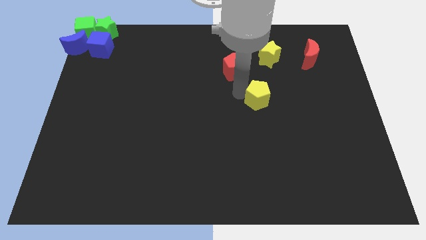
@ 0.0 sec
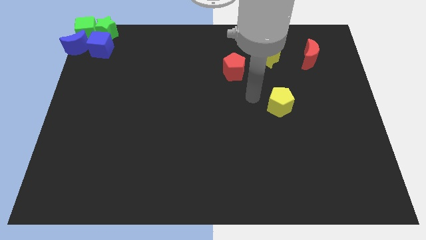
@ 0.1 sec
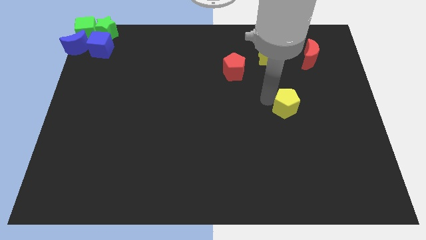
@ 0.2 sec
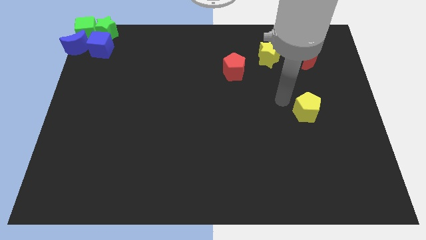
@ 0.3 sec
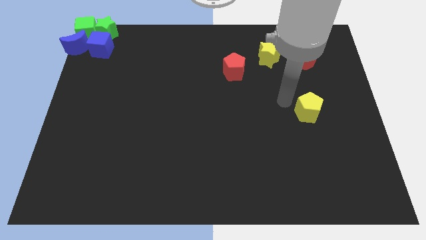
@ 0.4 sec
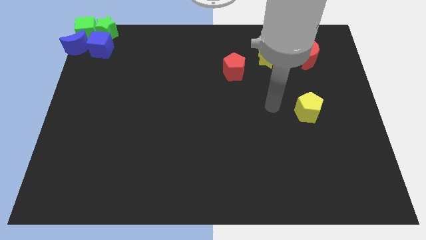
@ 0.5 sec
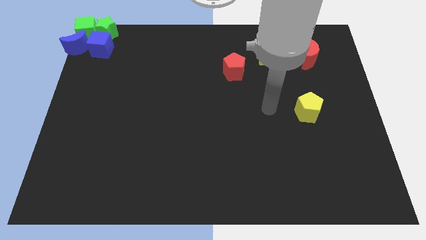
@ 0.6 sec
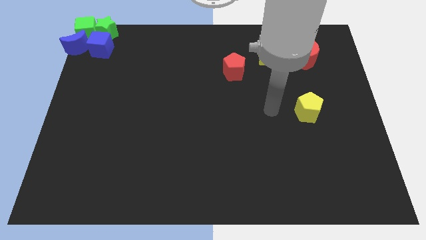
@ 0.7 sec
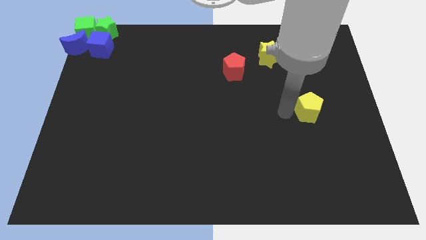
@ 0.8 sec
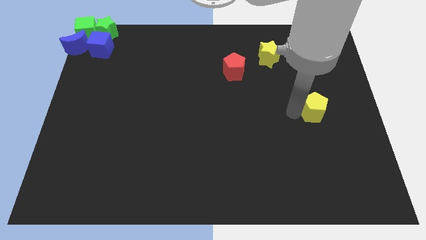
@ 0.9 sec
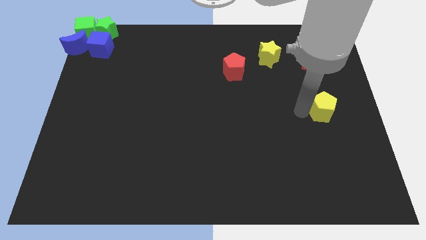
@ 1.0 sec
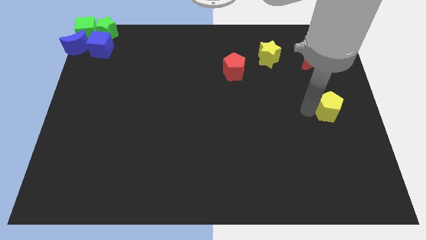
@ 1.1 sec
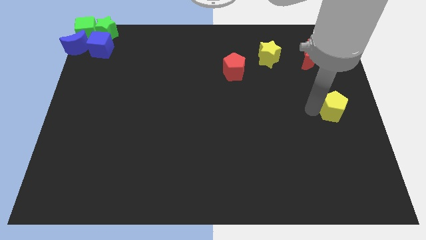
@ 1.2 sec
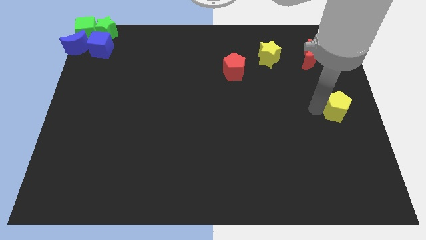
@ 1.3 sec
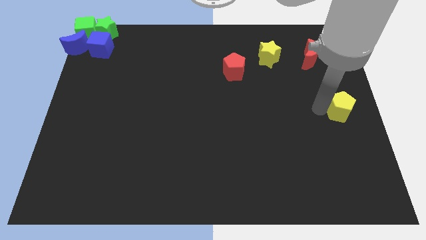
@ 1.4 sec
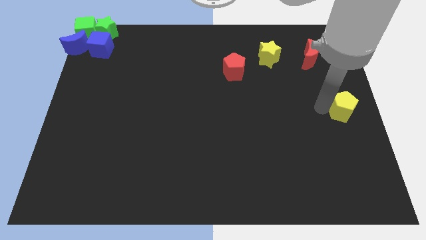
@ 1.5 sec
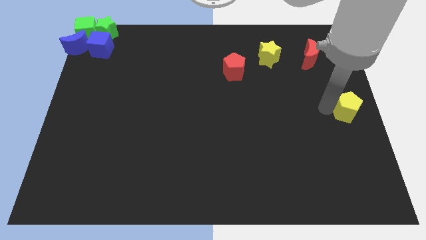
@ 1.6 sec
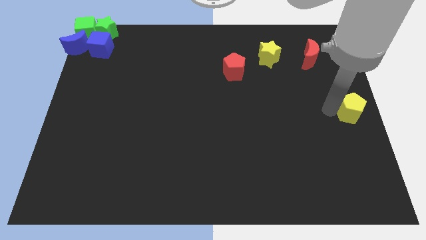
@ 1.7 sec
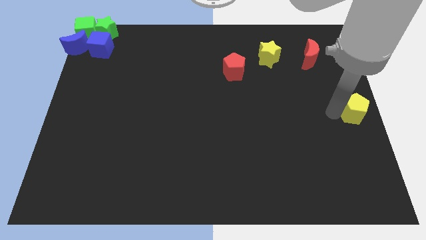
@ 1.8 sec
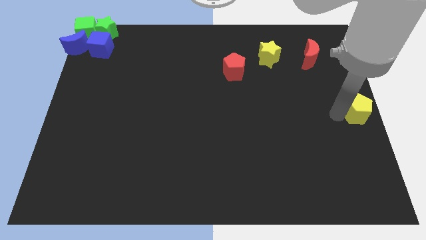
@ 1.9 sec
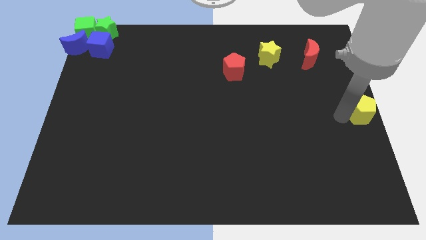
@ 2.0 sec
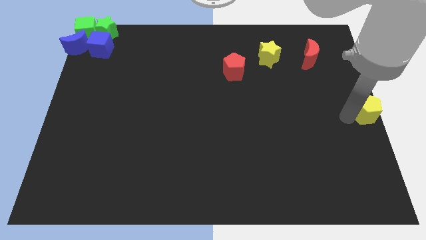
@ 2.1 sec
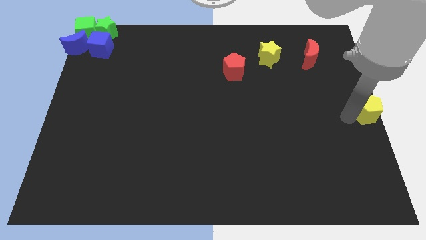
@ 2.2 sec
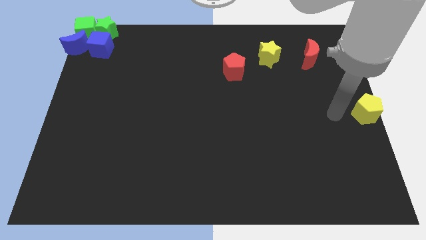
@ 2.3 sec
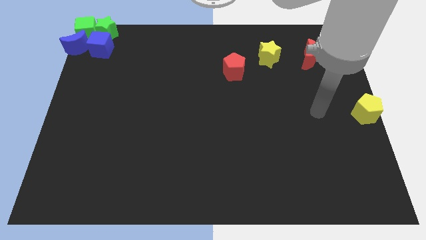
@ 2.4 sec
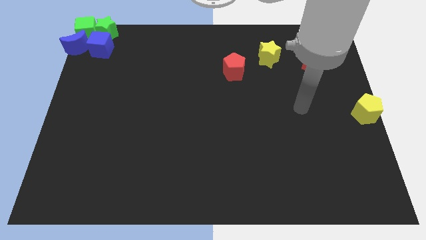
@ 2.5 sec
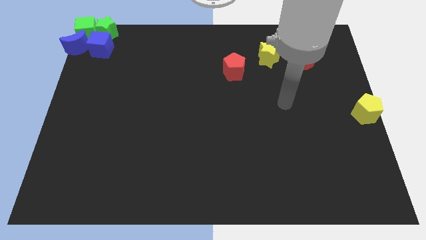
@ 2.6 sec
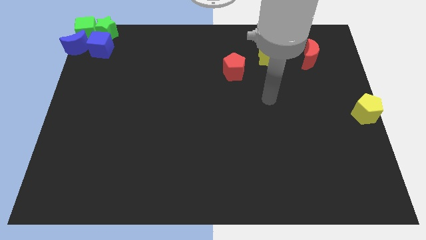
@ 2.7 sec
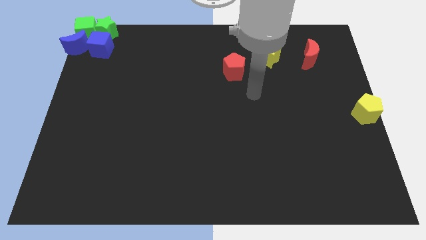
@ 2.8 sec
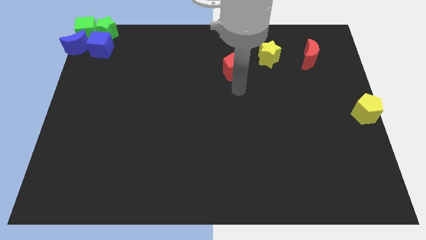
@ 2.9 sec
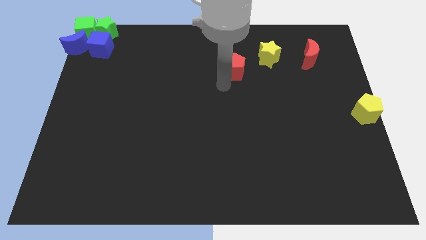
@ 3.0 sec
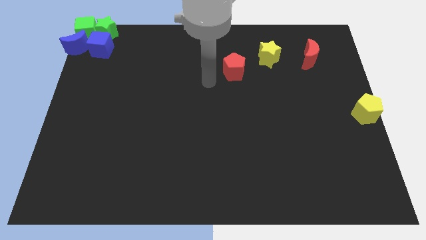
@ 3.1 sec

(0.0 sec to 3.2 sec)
place the yellow pentagon at the center right of the board

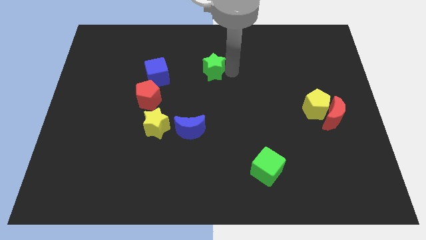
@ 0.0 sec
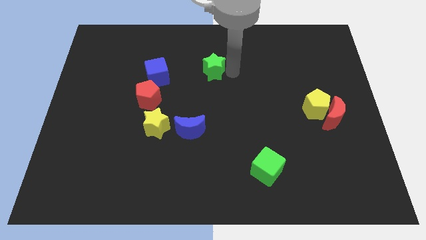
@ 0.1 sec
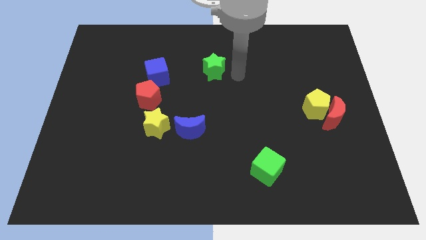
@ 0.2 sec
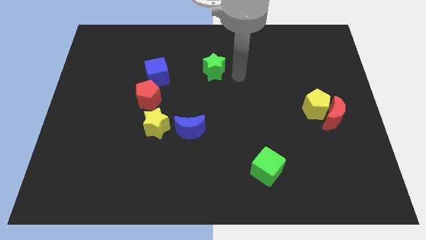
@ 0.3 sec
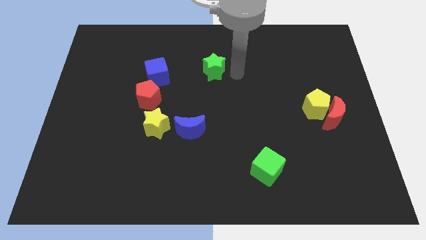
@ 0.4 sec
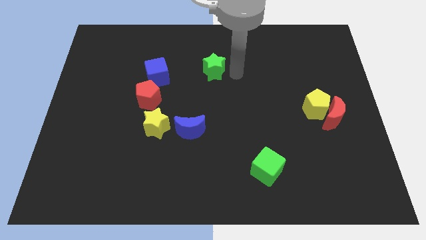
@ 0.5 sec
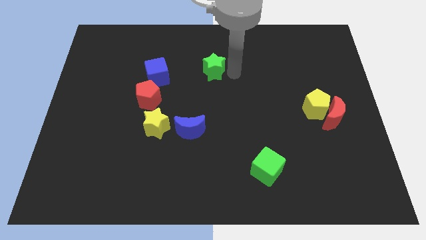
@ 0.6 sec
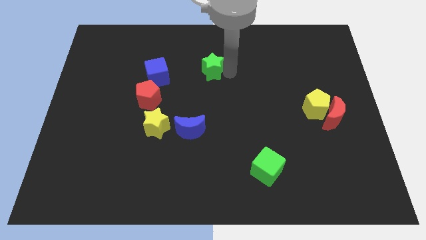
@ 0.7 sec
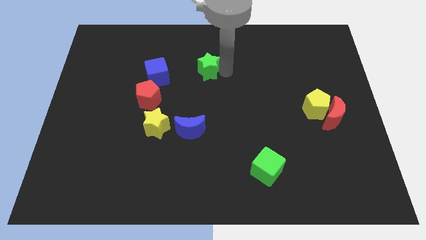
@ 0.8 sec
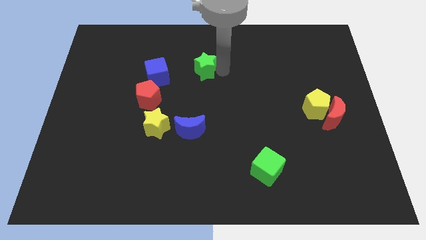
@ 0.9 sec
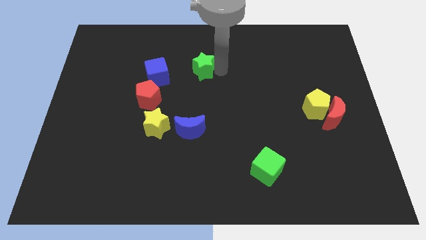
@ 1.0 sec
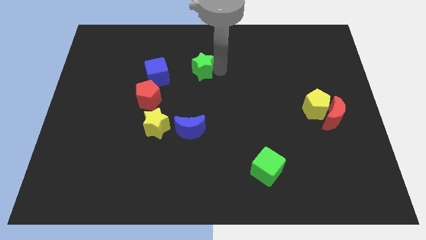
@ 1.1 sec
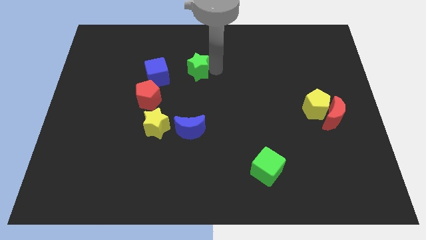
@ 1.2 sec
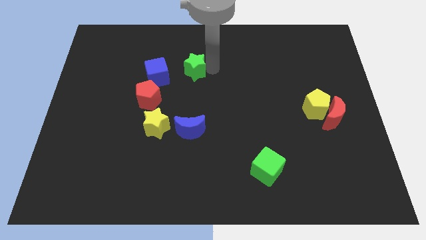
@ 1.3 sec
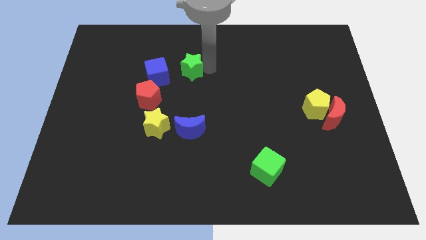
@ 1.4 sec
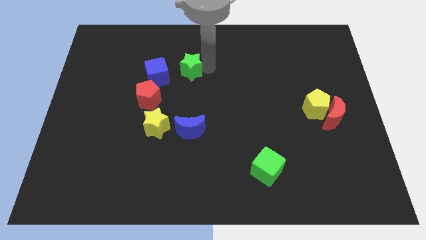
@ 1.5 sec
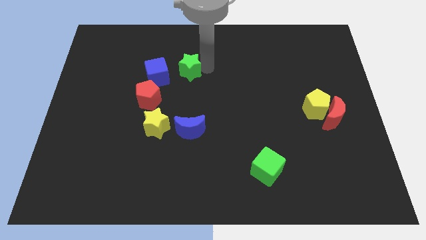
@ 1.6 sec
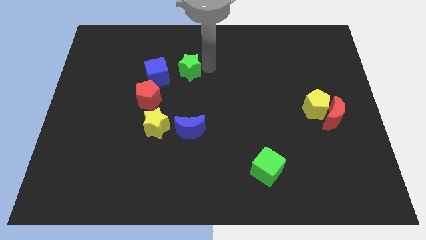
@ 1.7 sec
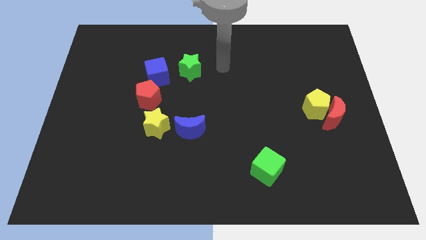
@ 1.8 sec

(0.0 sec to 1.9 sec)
push the green star to the right side of the blue cube

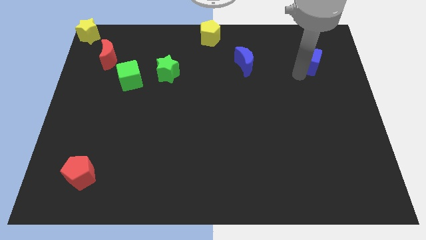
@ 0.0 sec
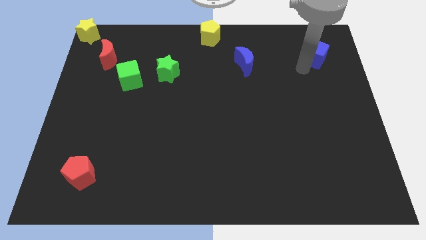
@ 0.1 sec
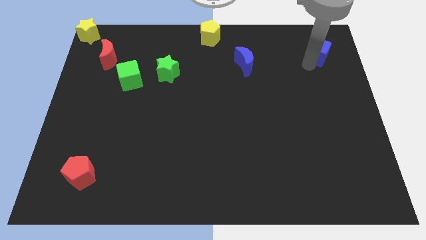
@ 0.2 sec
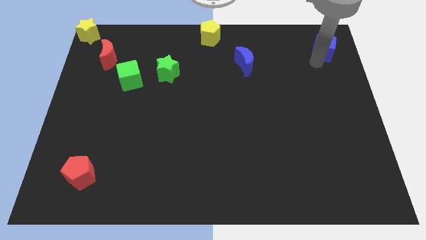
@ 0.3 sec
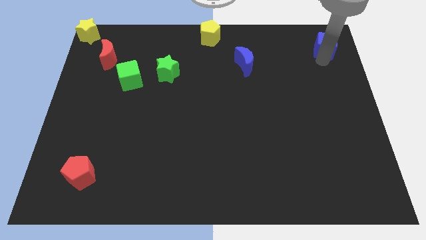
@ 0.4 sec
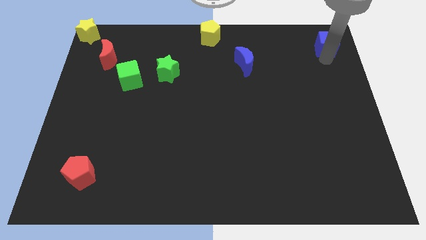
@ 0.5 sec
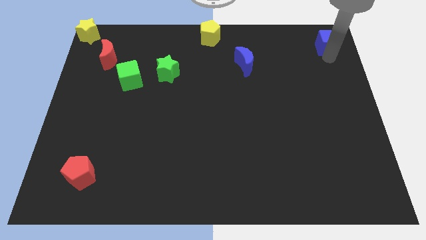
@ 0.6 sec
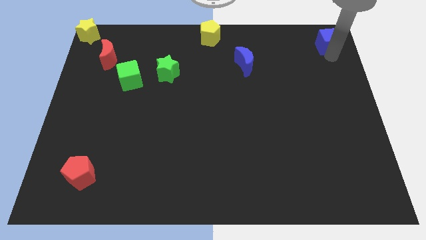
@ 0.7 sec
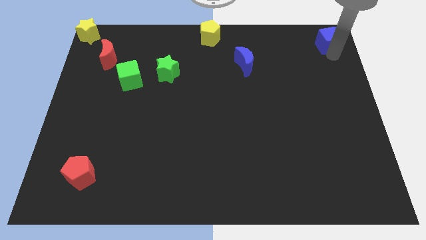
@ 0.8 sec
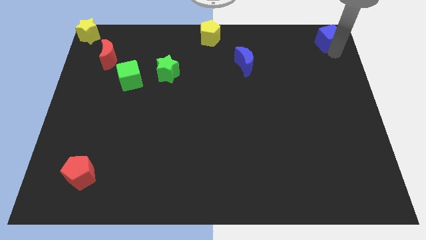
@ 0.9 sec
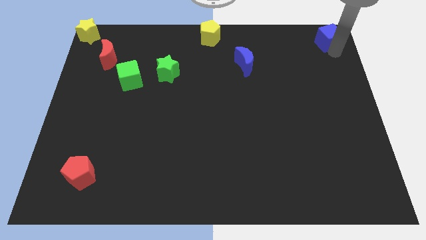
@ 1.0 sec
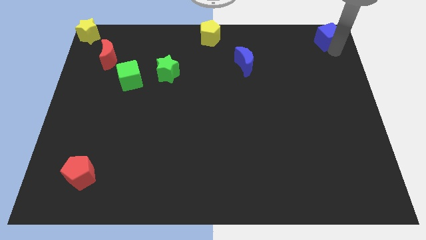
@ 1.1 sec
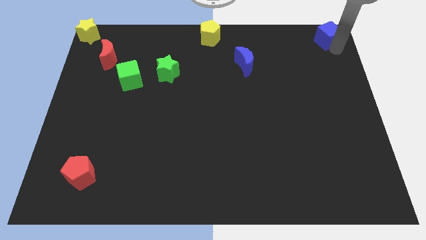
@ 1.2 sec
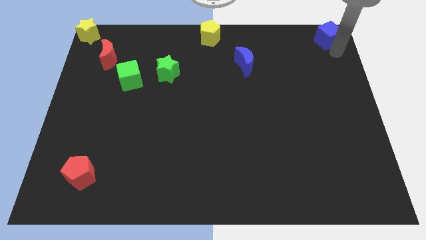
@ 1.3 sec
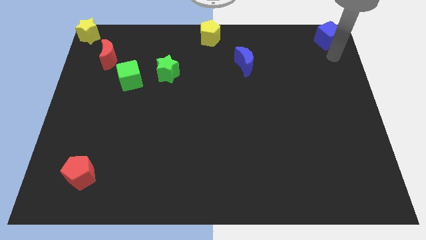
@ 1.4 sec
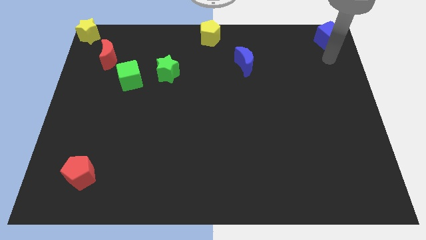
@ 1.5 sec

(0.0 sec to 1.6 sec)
push the blue cube to the top right corner of the board

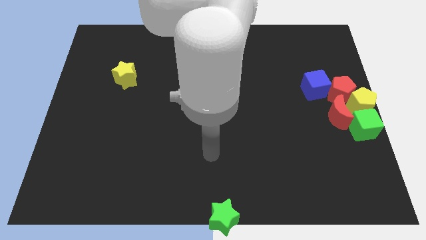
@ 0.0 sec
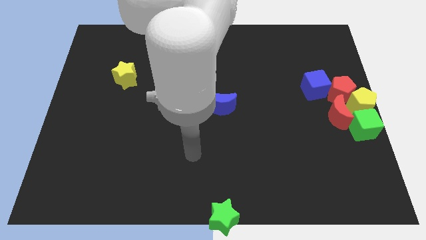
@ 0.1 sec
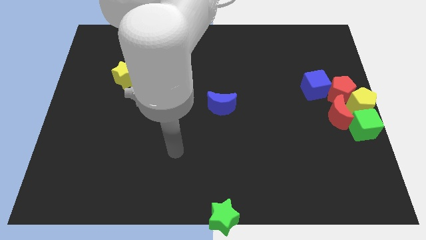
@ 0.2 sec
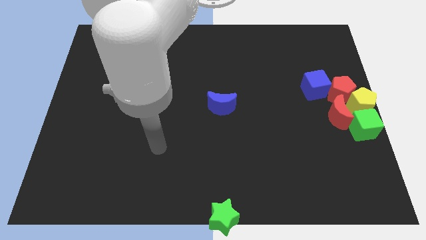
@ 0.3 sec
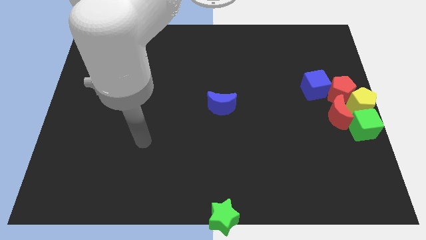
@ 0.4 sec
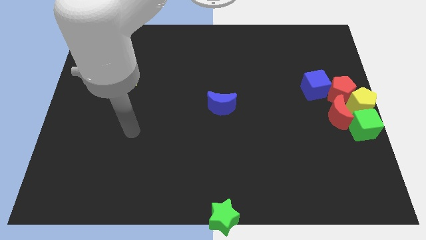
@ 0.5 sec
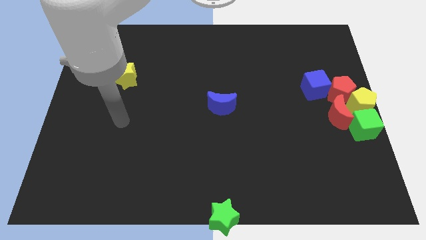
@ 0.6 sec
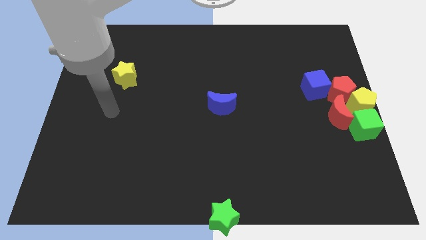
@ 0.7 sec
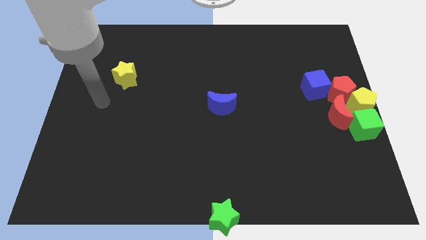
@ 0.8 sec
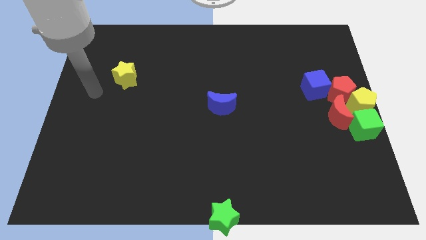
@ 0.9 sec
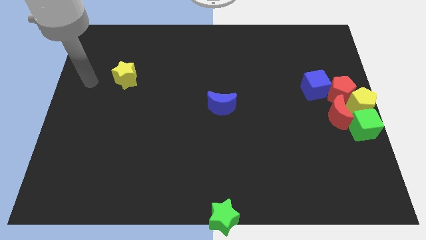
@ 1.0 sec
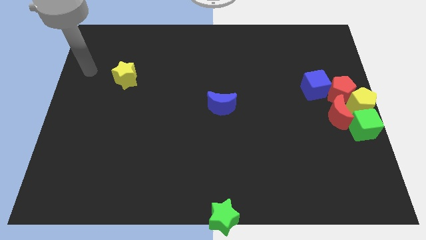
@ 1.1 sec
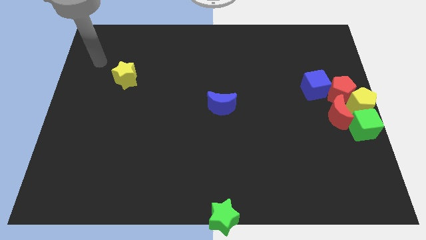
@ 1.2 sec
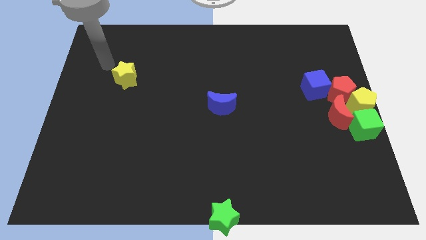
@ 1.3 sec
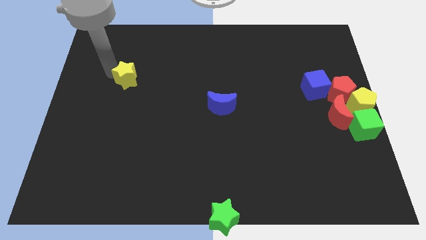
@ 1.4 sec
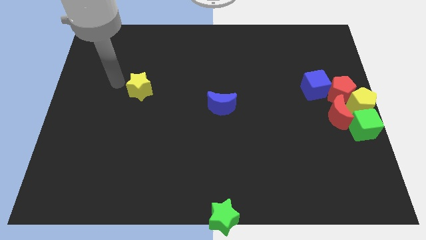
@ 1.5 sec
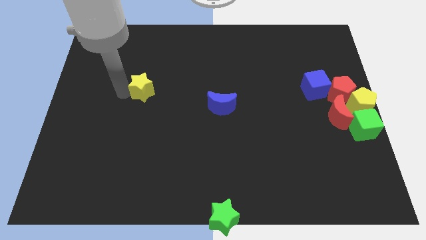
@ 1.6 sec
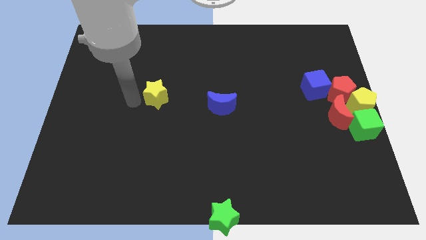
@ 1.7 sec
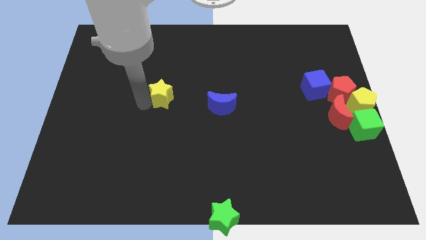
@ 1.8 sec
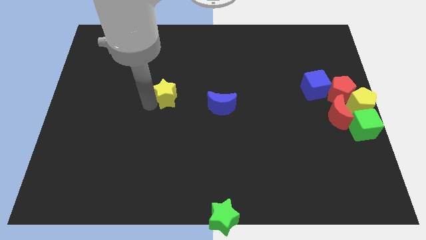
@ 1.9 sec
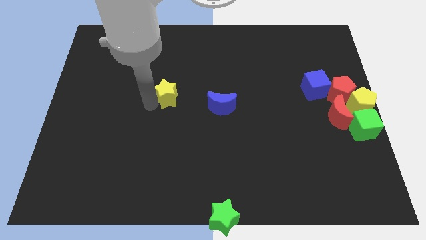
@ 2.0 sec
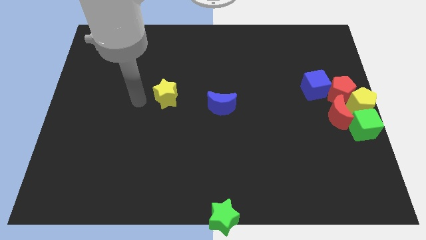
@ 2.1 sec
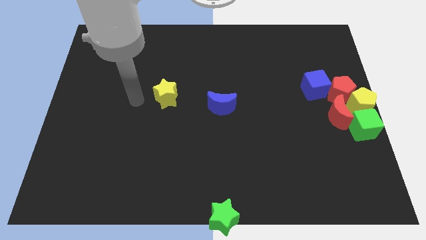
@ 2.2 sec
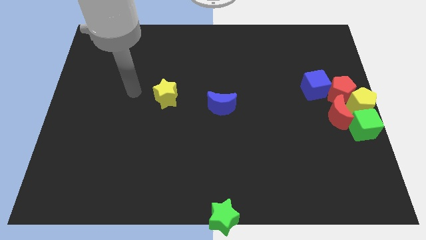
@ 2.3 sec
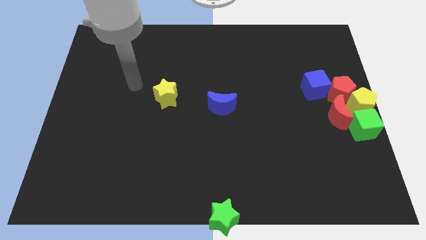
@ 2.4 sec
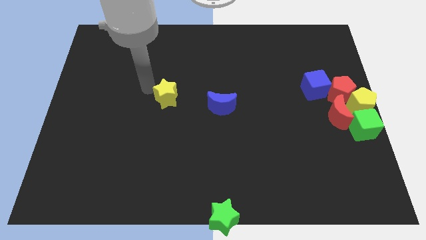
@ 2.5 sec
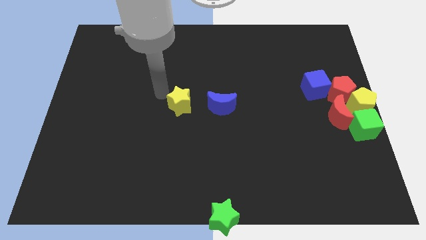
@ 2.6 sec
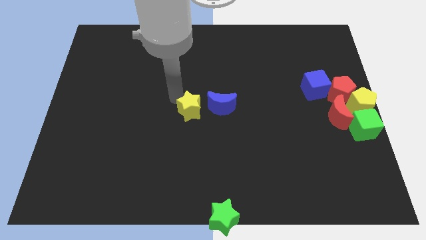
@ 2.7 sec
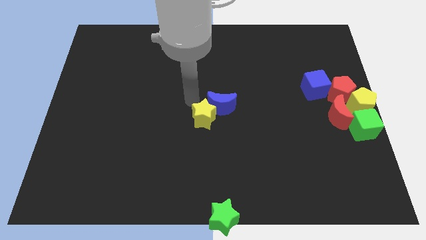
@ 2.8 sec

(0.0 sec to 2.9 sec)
push yellow star into the blue moon
